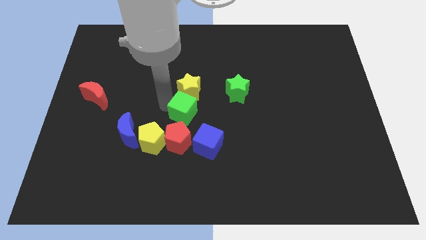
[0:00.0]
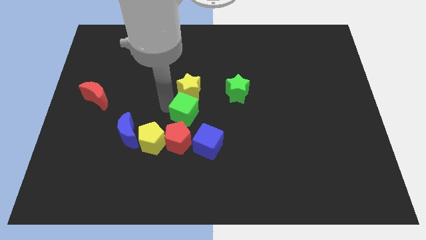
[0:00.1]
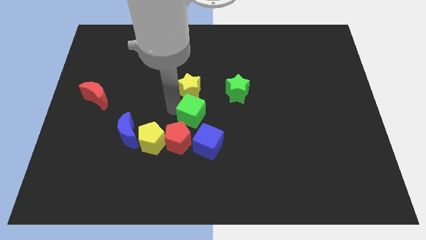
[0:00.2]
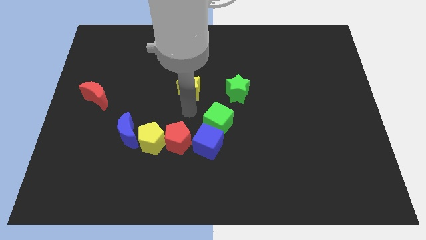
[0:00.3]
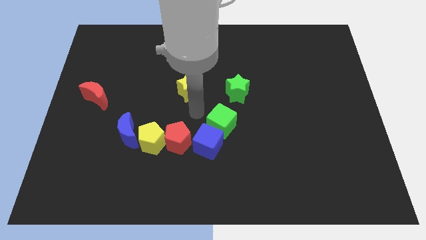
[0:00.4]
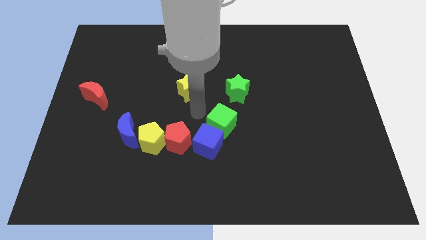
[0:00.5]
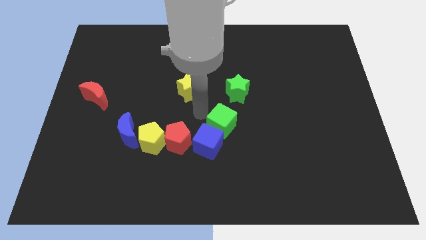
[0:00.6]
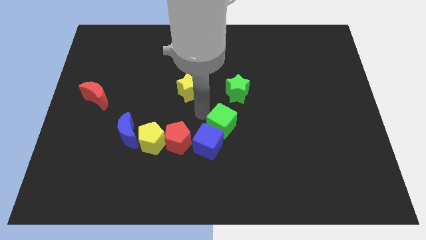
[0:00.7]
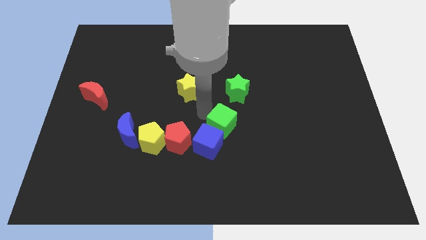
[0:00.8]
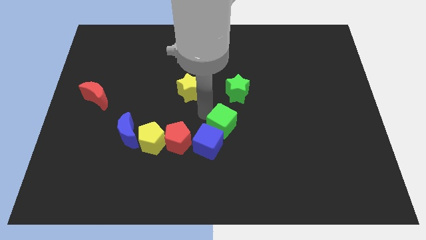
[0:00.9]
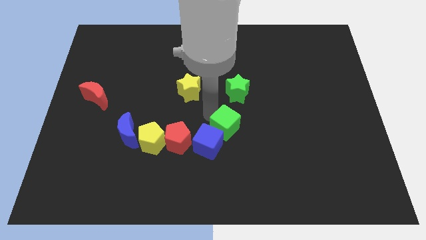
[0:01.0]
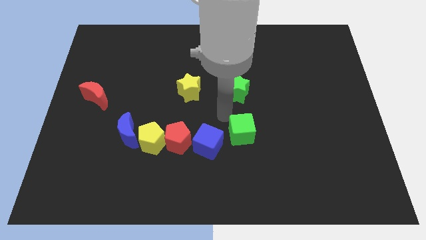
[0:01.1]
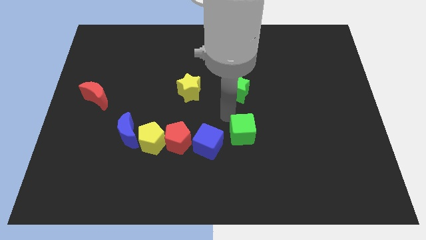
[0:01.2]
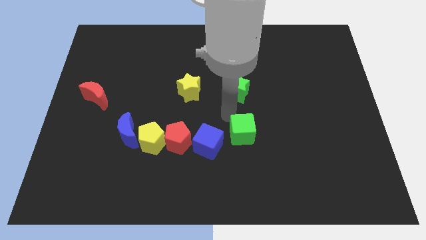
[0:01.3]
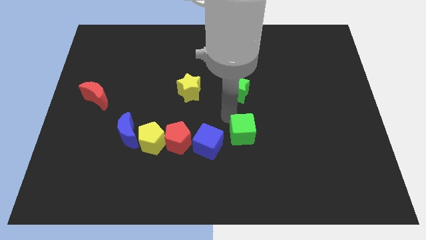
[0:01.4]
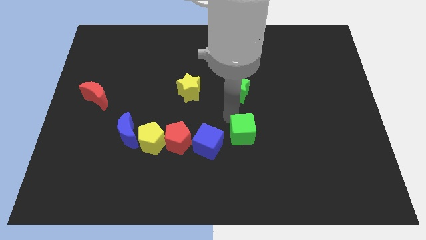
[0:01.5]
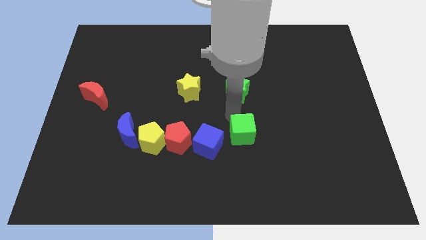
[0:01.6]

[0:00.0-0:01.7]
push the green cube towards the bottom center of the board

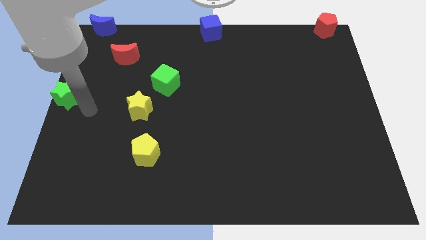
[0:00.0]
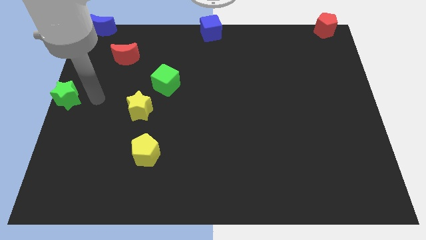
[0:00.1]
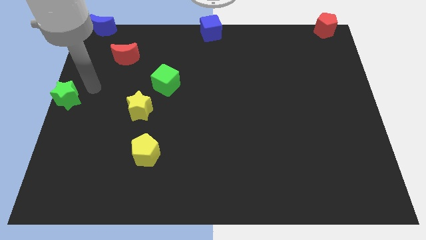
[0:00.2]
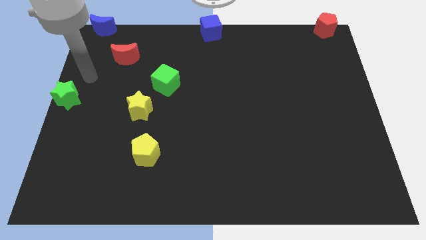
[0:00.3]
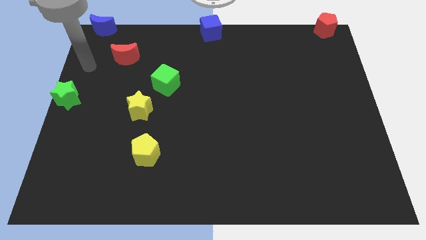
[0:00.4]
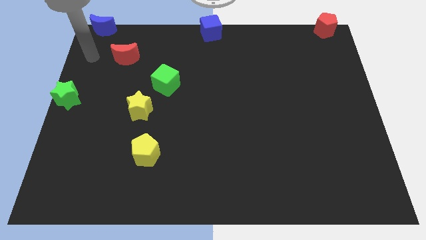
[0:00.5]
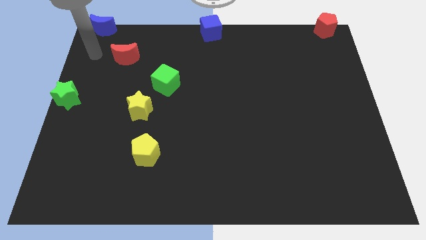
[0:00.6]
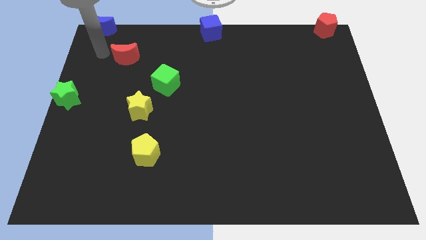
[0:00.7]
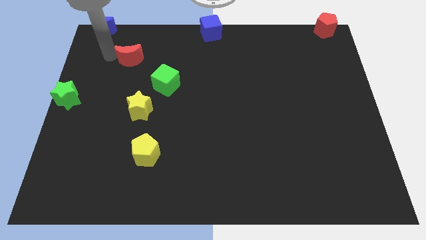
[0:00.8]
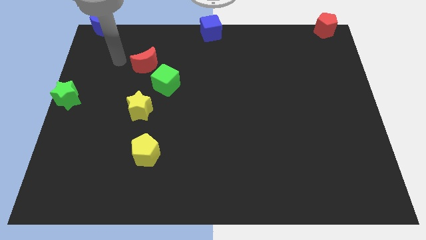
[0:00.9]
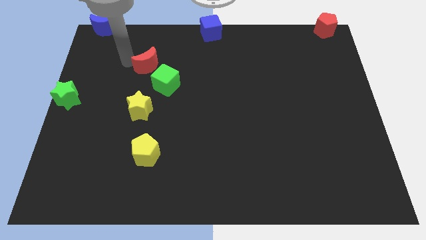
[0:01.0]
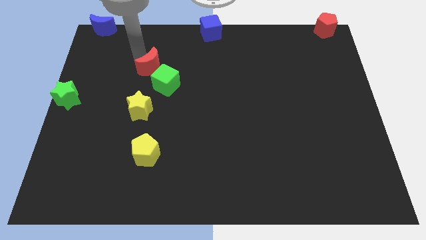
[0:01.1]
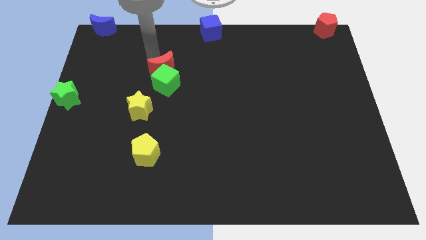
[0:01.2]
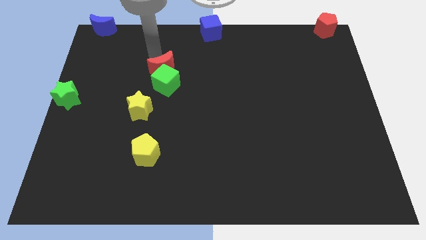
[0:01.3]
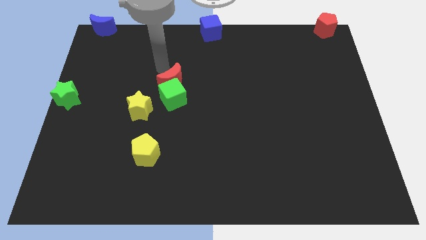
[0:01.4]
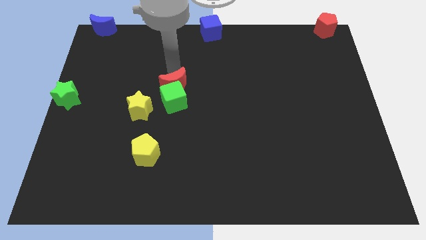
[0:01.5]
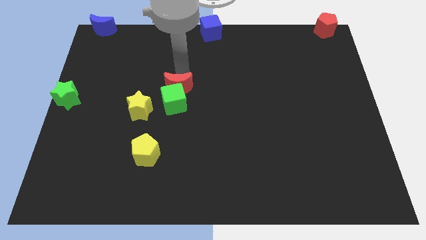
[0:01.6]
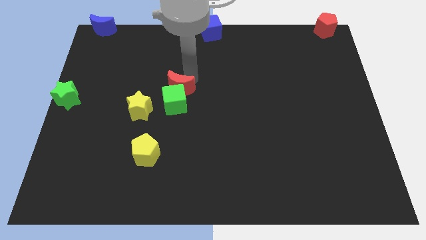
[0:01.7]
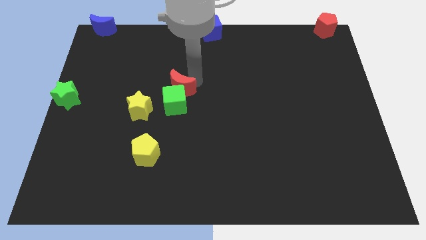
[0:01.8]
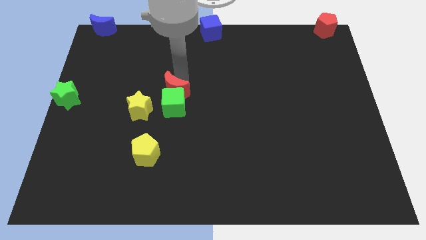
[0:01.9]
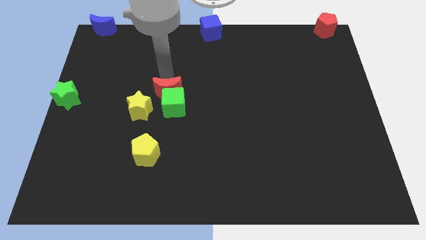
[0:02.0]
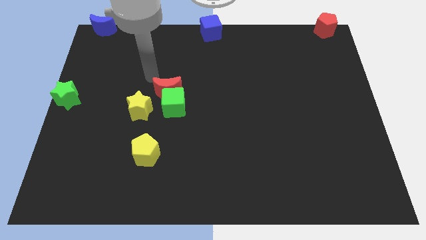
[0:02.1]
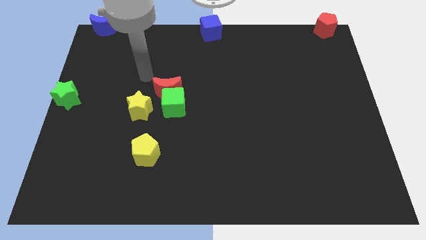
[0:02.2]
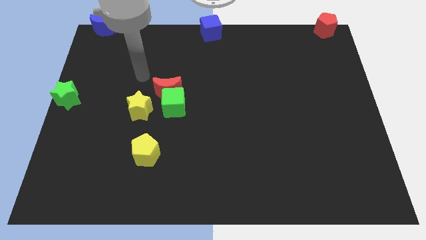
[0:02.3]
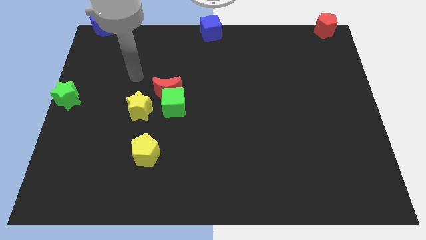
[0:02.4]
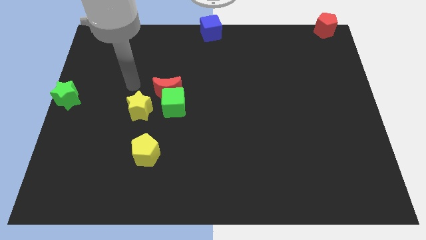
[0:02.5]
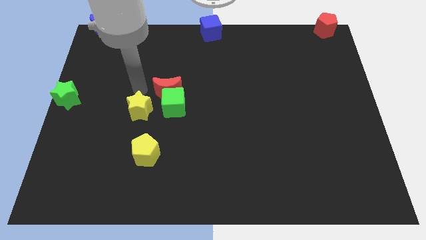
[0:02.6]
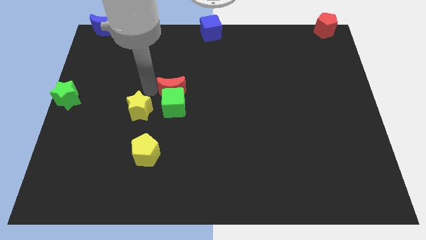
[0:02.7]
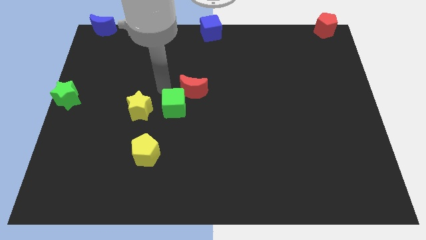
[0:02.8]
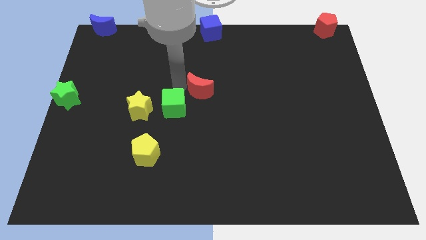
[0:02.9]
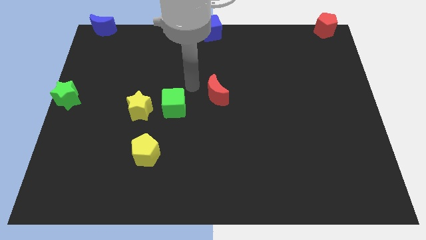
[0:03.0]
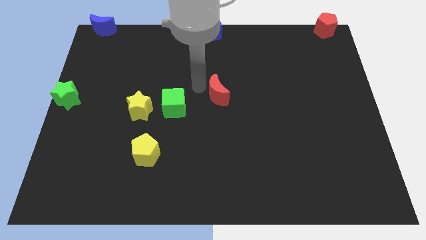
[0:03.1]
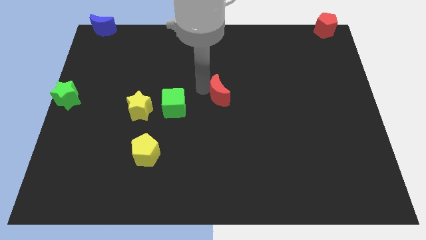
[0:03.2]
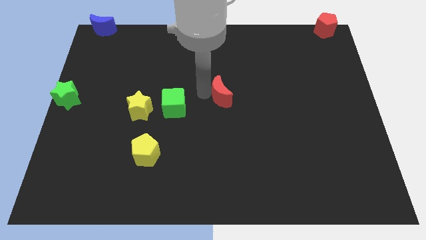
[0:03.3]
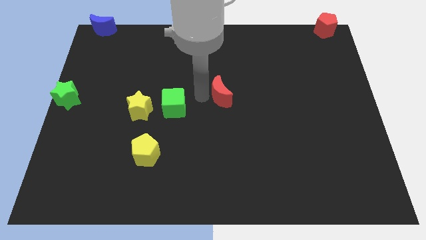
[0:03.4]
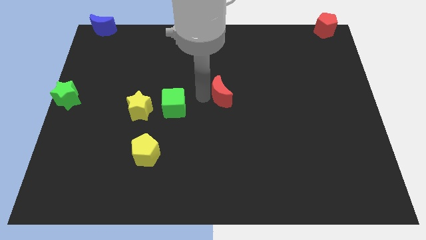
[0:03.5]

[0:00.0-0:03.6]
place the red moon to the center

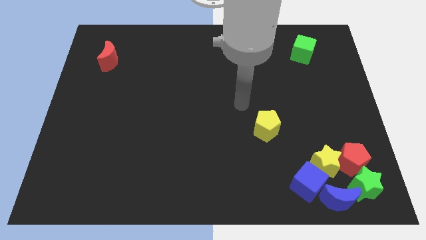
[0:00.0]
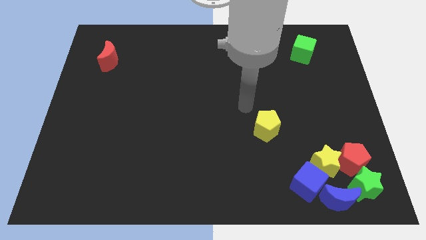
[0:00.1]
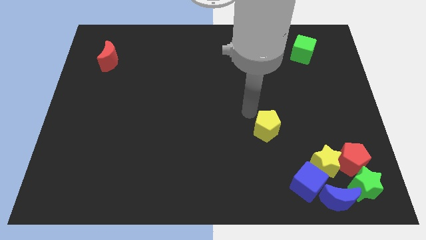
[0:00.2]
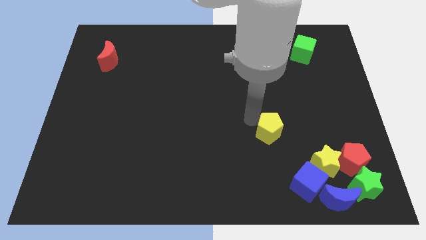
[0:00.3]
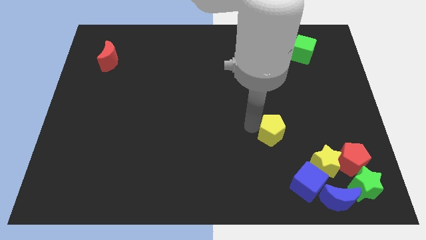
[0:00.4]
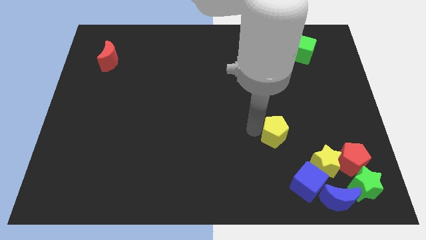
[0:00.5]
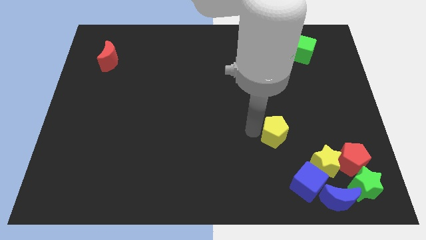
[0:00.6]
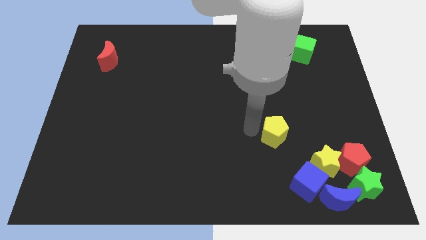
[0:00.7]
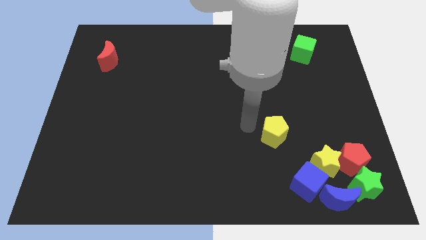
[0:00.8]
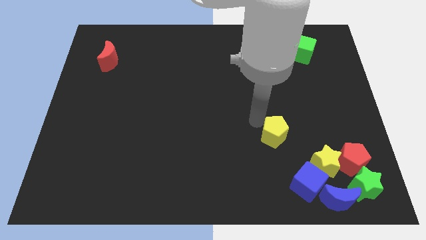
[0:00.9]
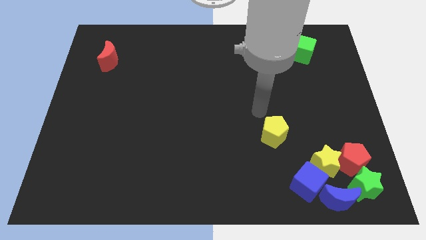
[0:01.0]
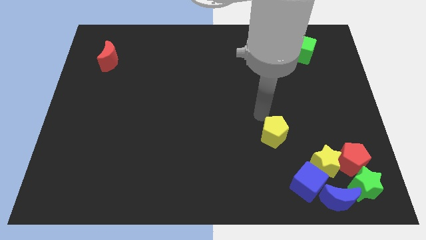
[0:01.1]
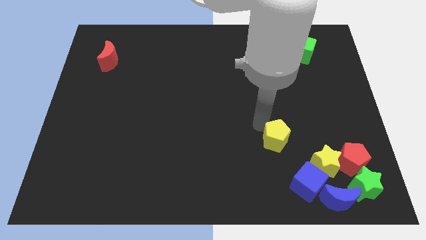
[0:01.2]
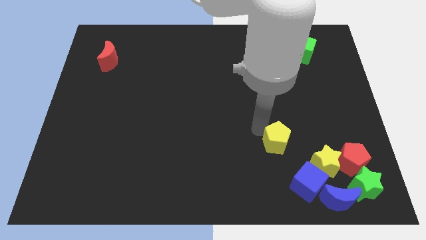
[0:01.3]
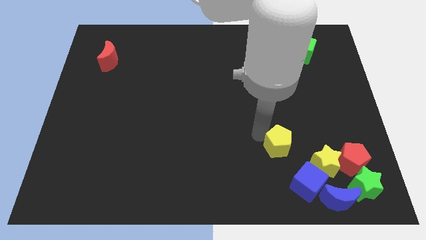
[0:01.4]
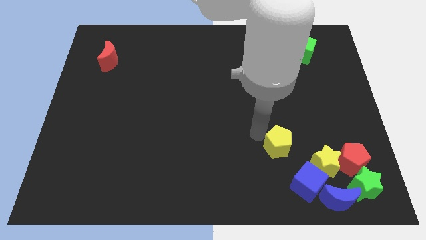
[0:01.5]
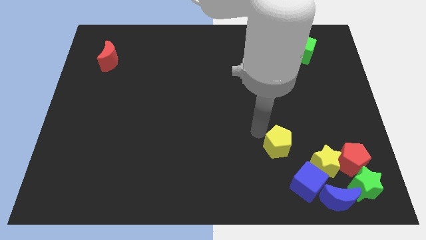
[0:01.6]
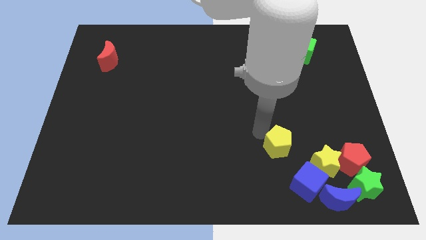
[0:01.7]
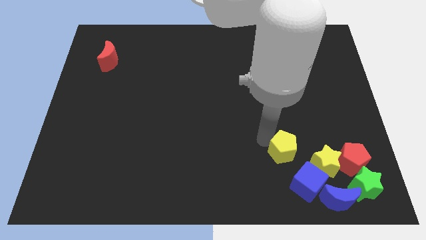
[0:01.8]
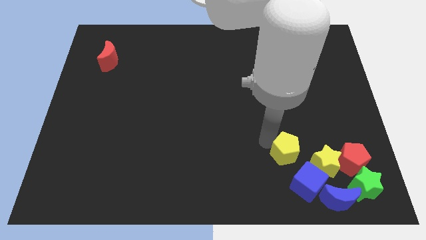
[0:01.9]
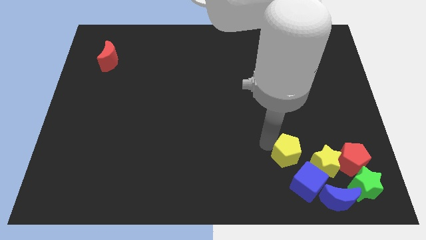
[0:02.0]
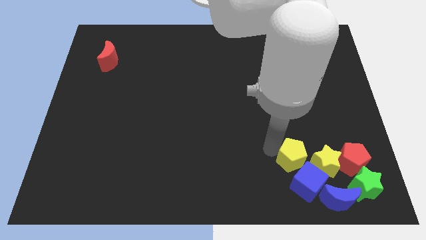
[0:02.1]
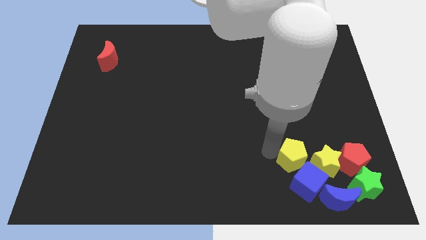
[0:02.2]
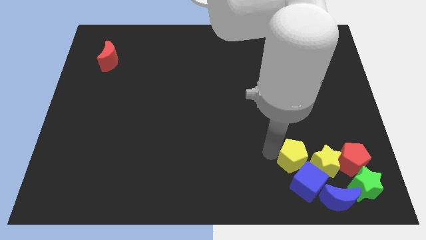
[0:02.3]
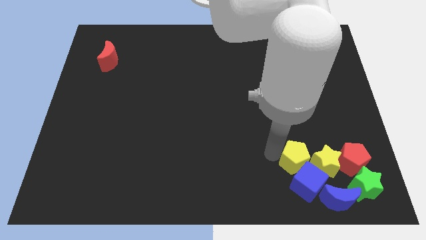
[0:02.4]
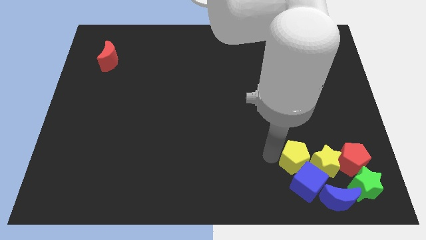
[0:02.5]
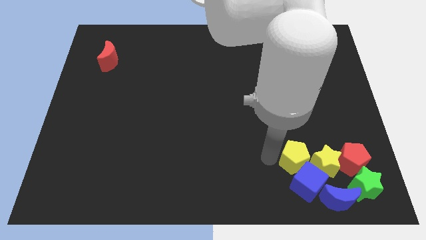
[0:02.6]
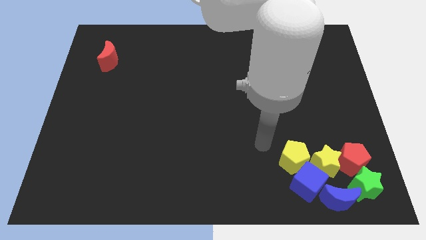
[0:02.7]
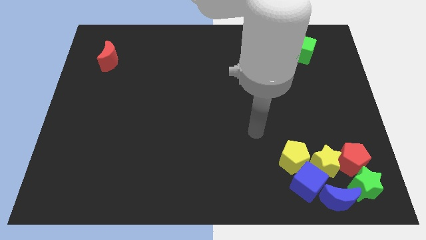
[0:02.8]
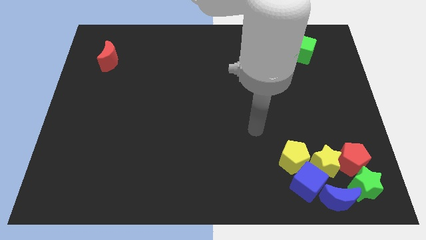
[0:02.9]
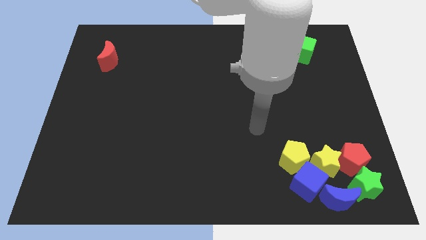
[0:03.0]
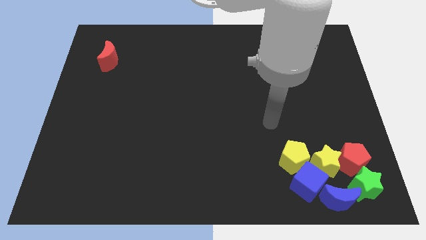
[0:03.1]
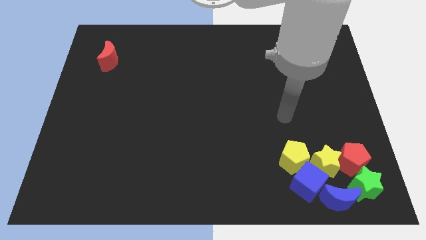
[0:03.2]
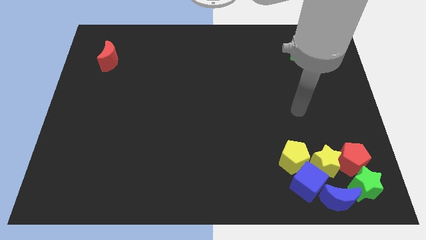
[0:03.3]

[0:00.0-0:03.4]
place the yellow pentagon at the top of the blue crescent

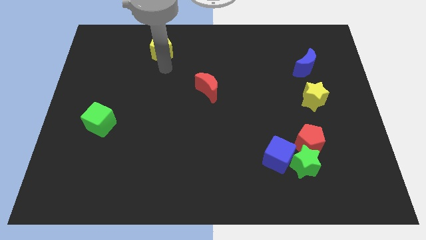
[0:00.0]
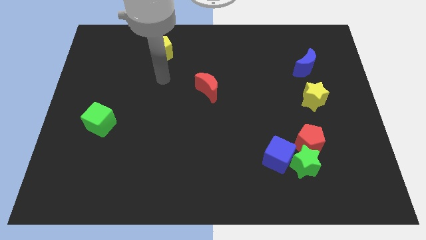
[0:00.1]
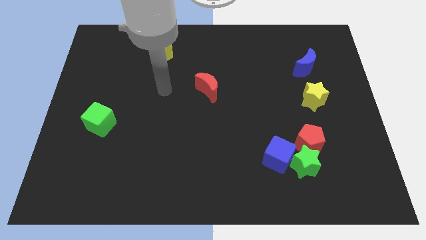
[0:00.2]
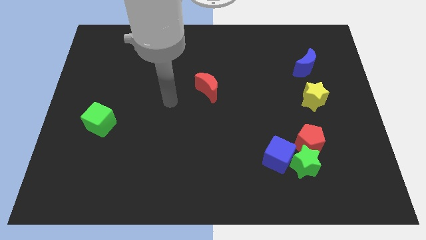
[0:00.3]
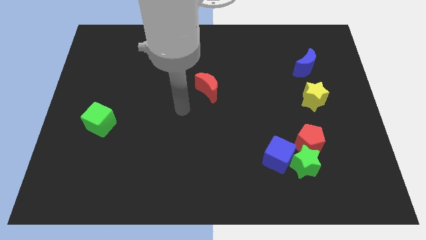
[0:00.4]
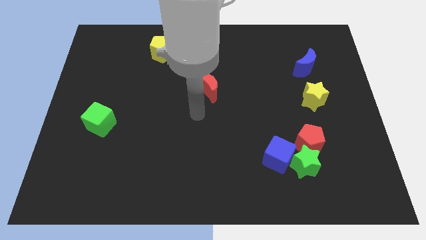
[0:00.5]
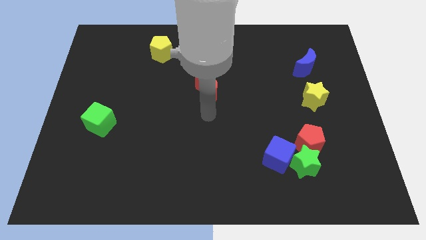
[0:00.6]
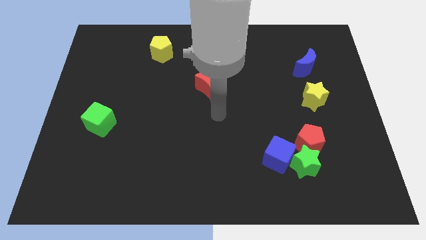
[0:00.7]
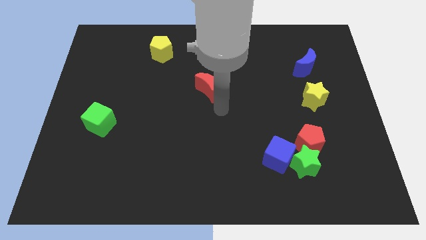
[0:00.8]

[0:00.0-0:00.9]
move your arm away from yellow pentagon
